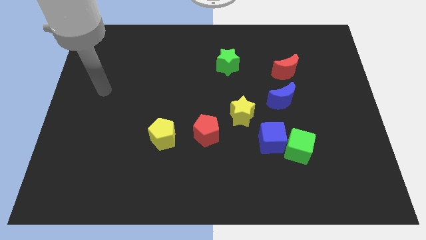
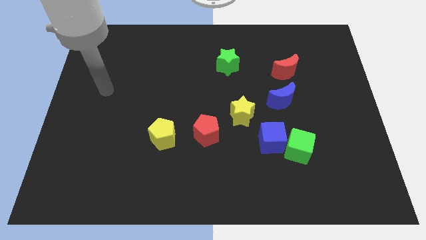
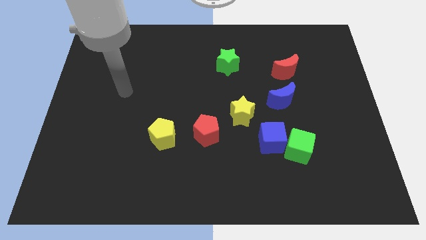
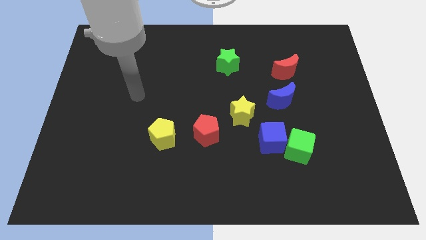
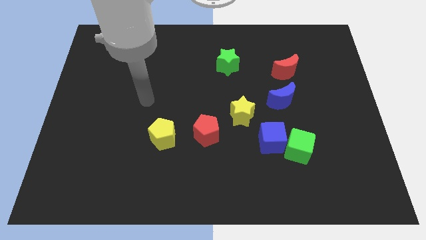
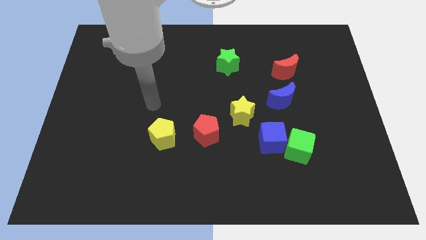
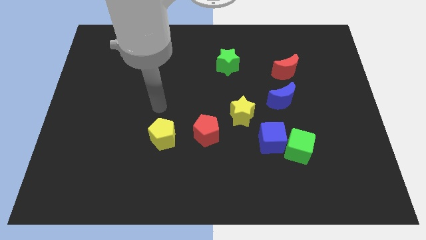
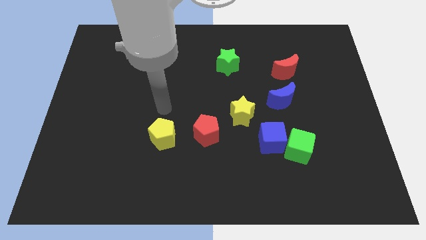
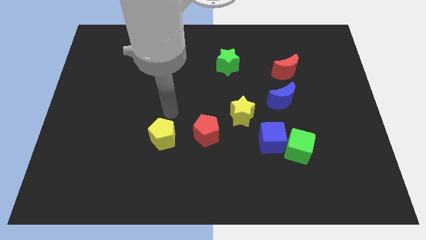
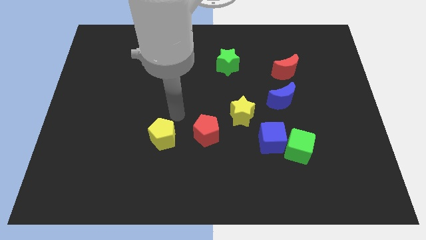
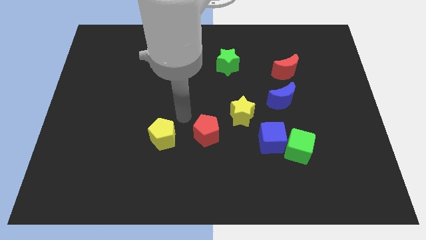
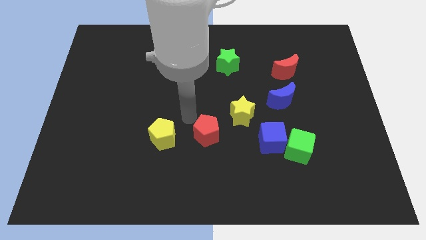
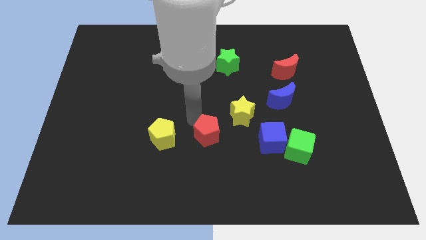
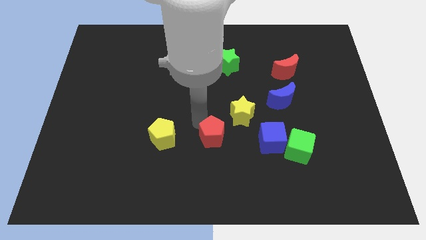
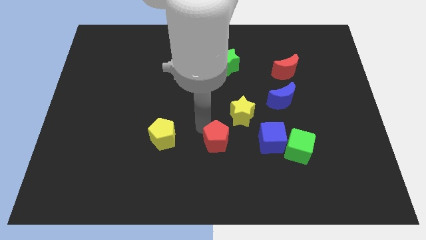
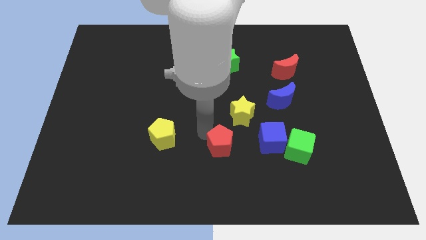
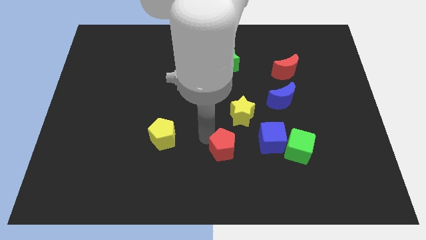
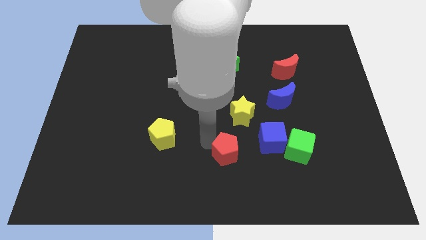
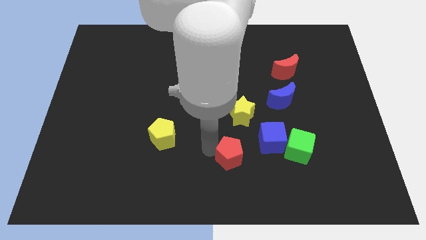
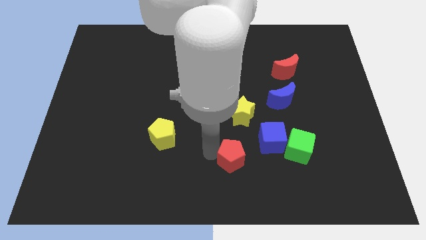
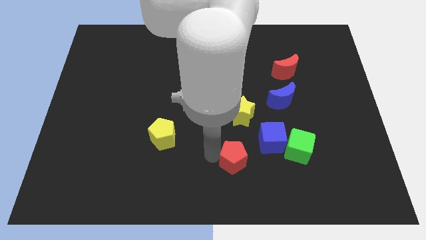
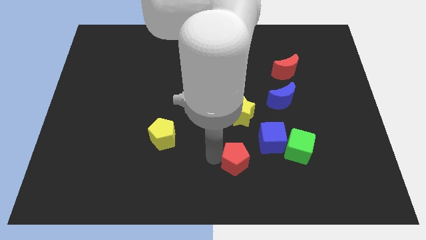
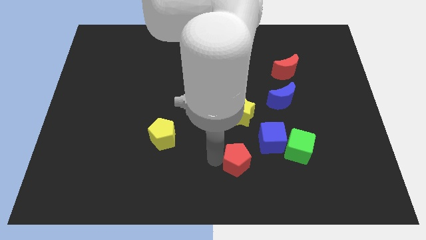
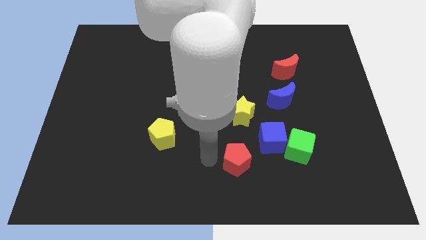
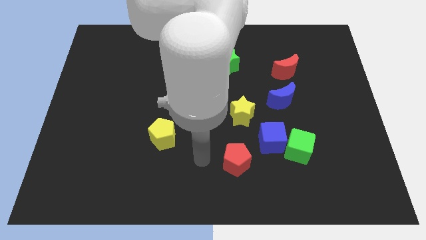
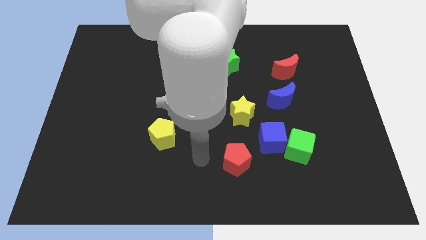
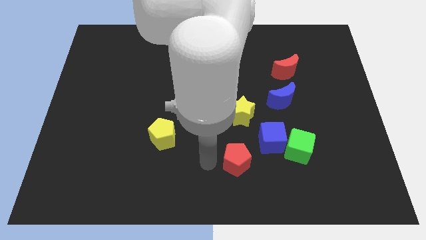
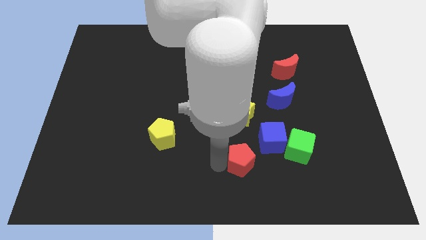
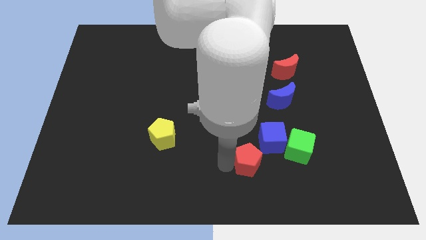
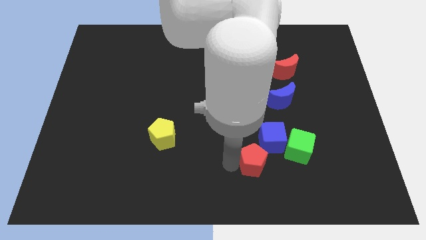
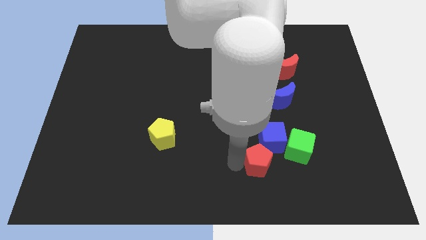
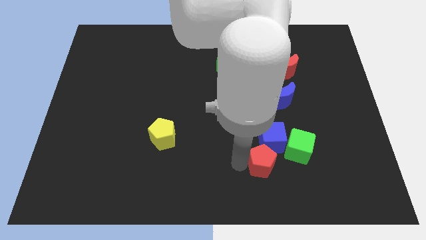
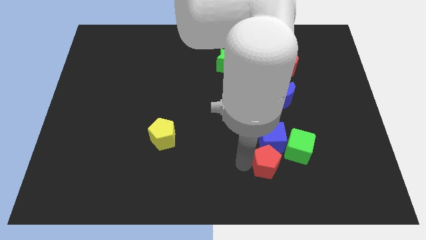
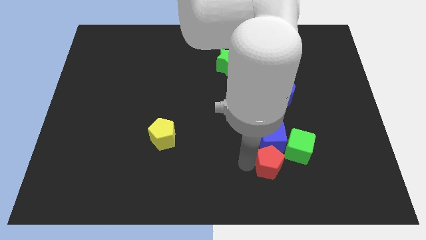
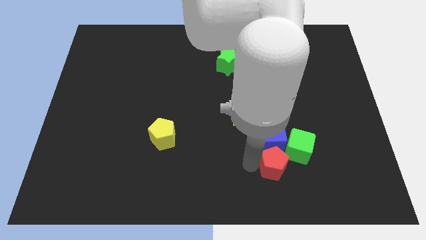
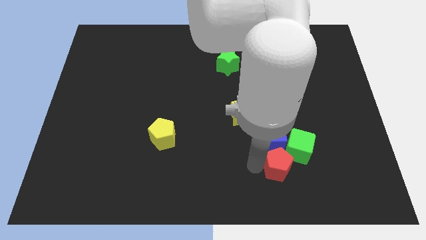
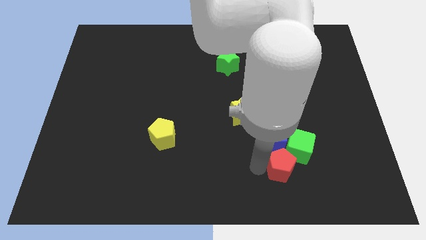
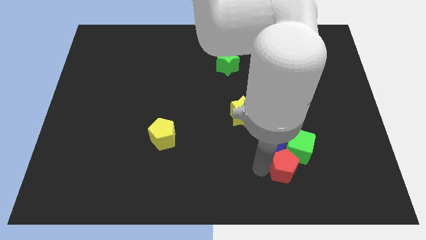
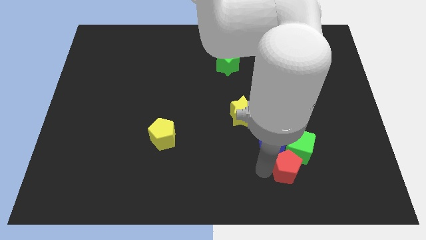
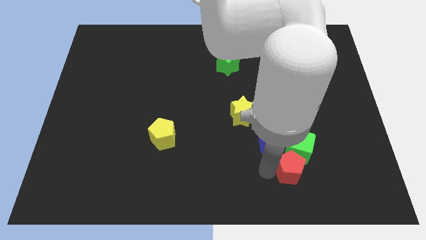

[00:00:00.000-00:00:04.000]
push the red pentagon to the green cube

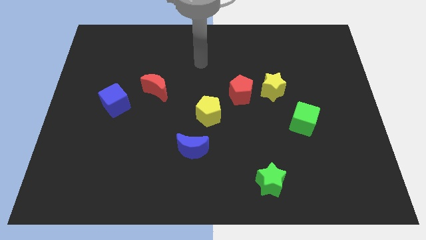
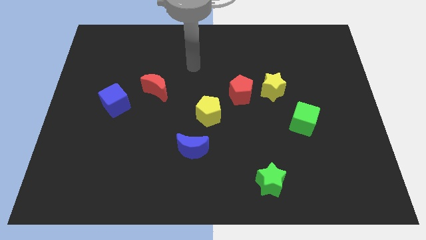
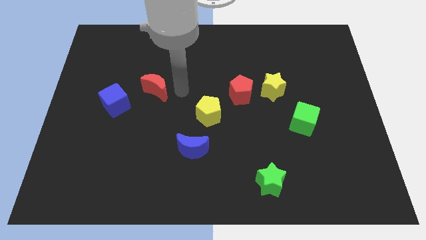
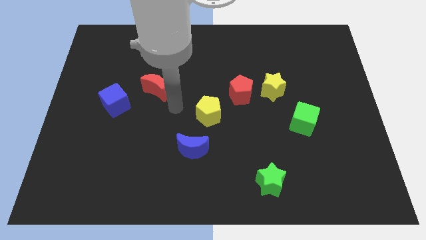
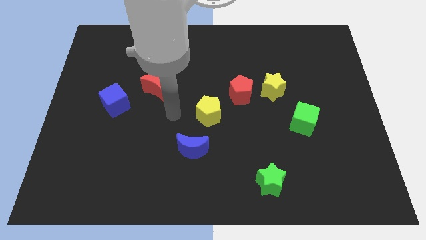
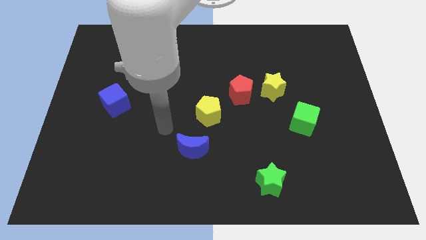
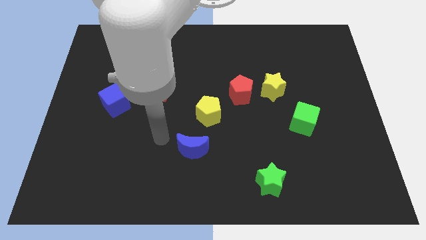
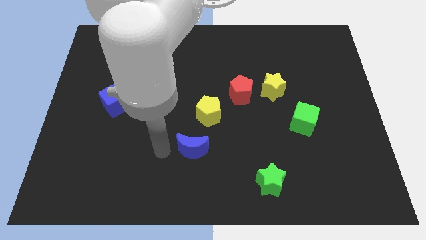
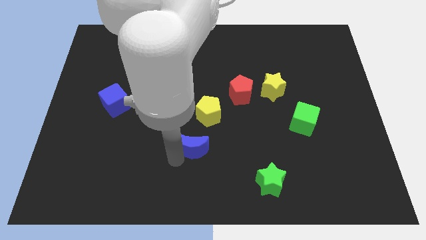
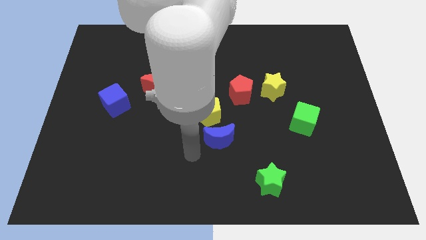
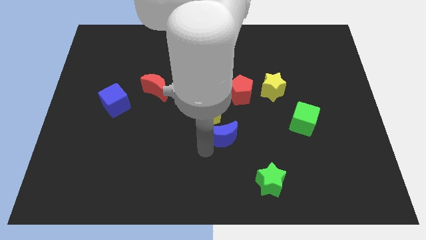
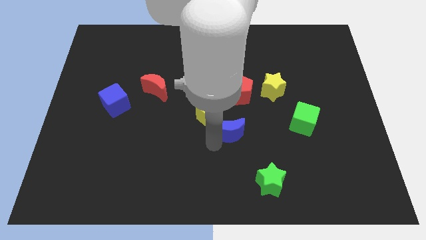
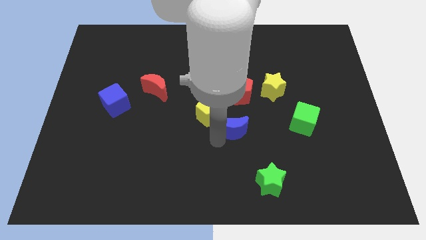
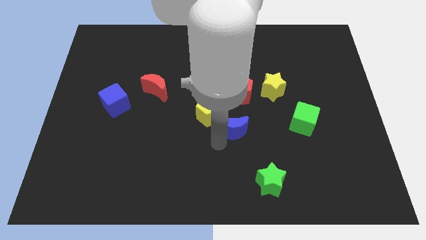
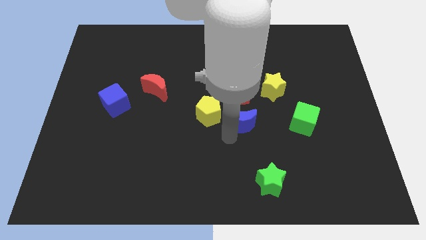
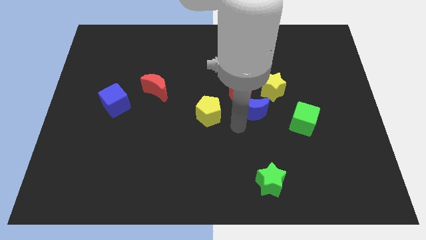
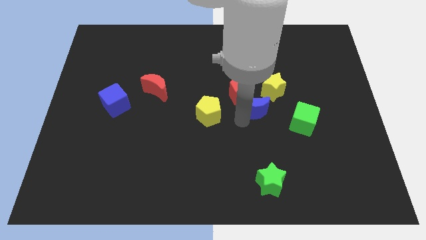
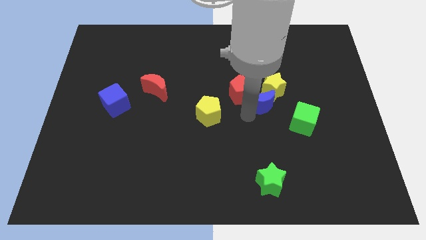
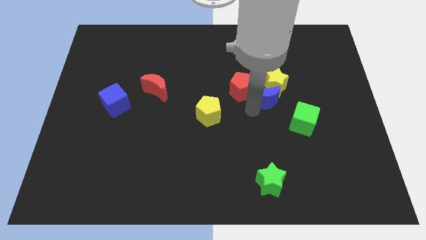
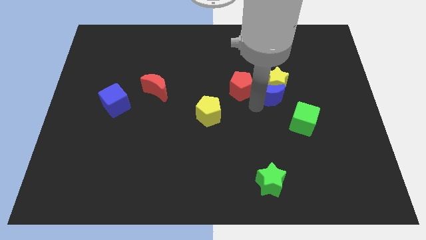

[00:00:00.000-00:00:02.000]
put the blue moon next to the yellow star

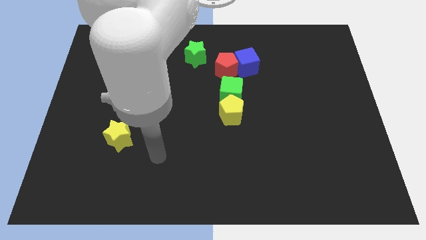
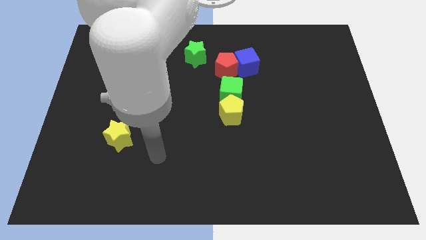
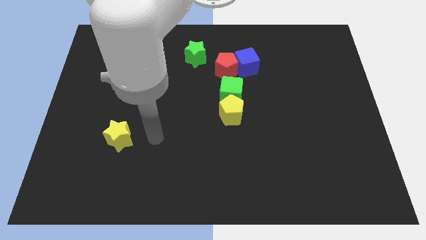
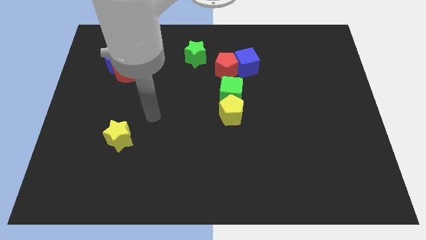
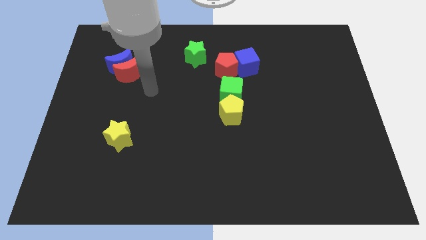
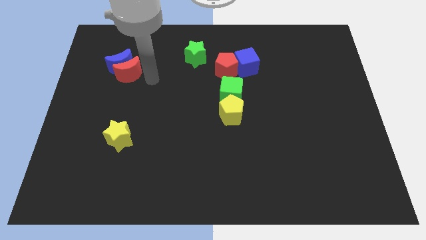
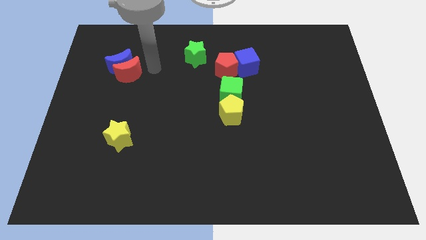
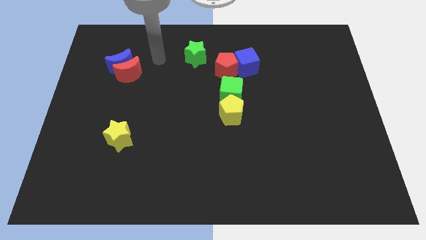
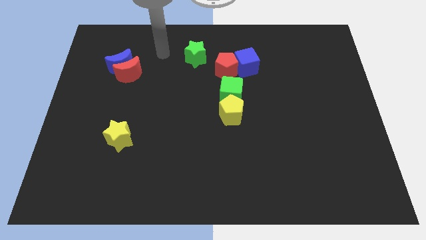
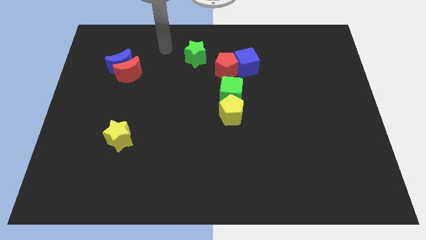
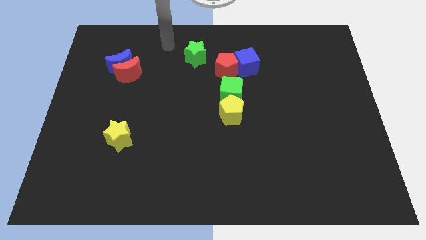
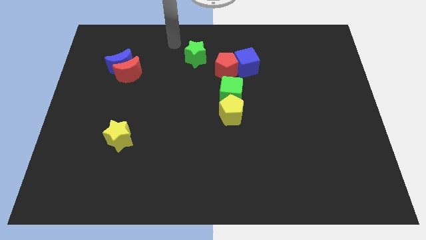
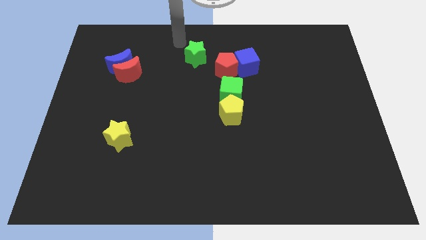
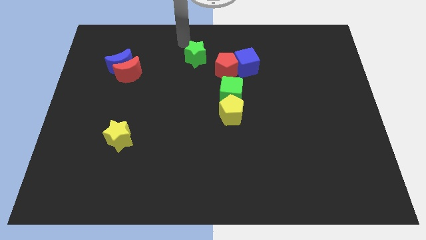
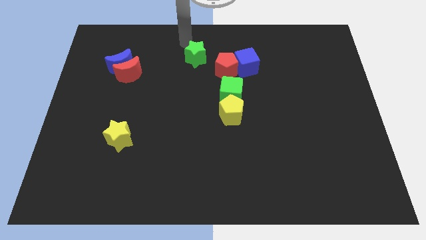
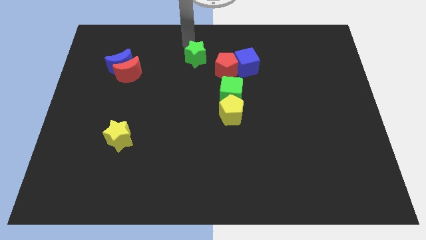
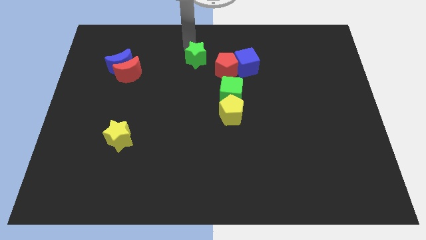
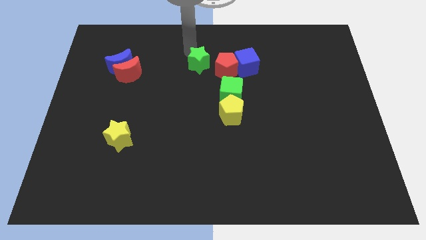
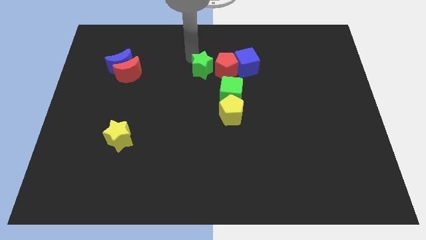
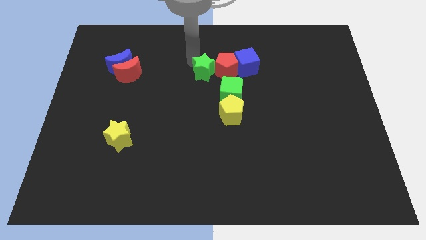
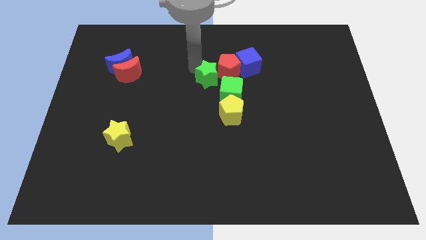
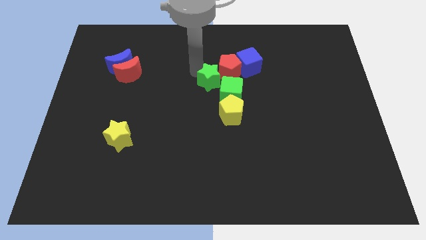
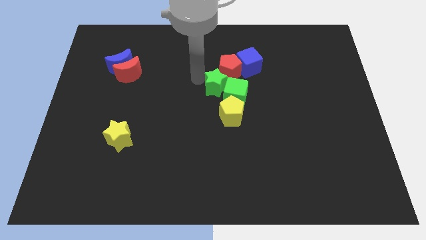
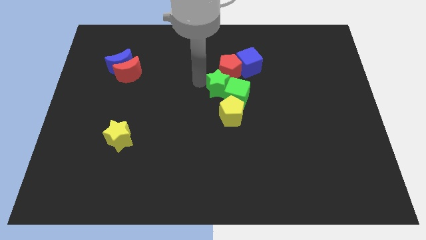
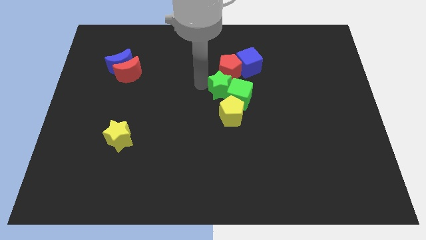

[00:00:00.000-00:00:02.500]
push the green star towards the green cube

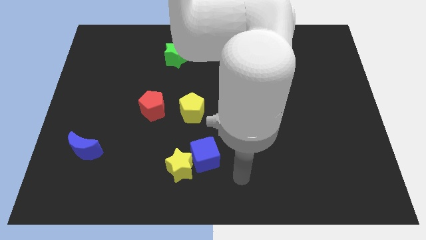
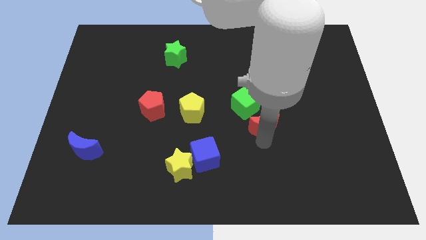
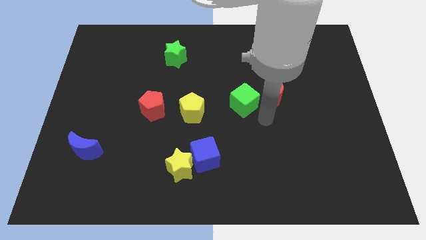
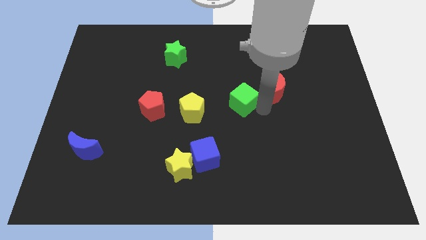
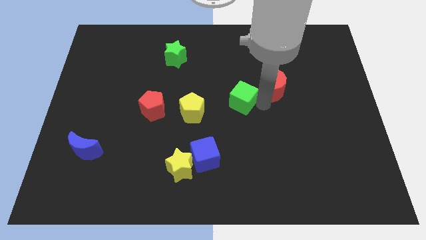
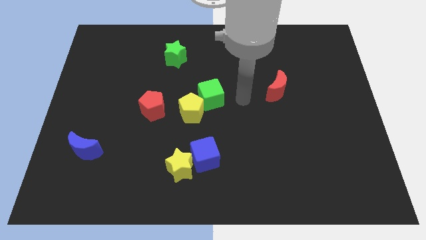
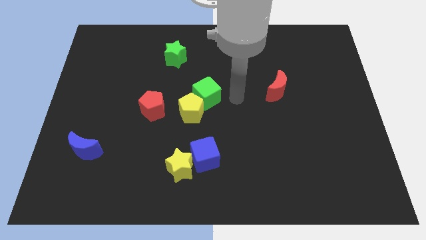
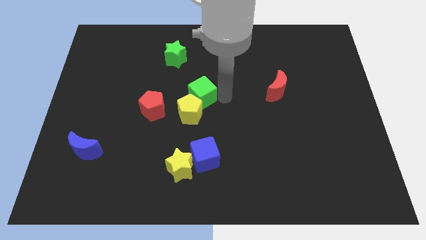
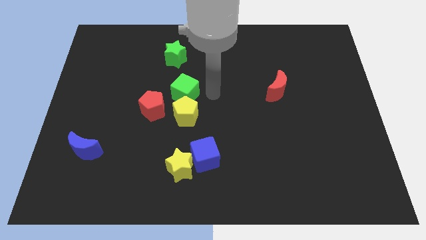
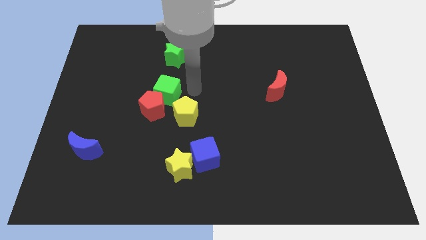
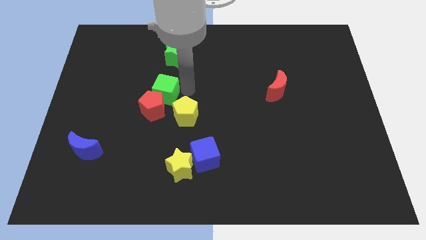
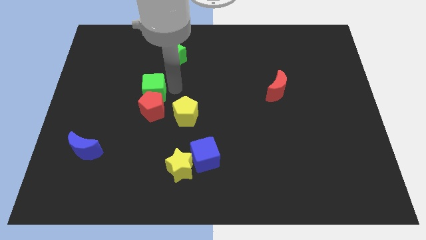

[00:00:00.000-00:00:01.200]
slide the green cube close to the red pentagon
